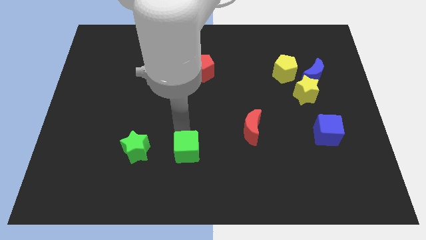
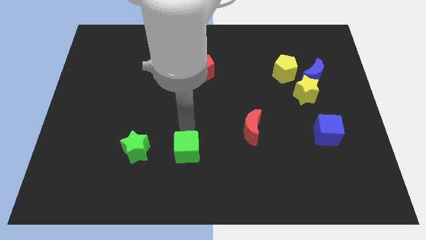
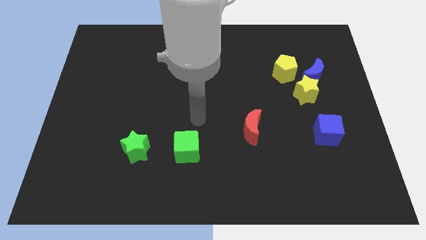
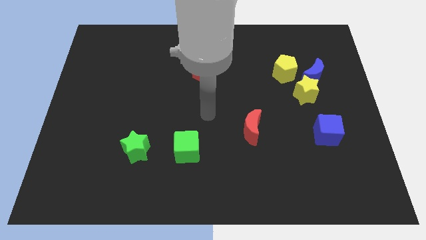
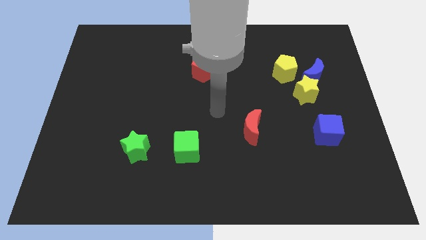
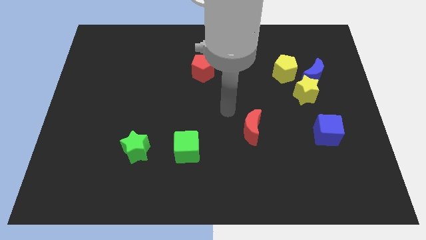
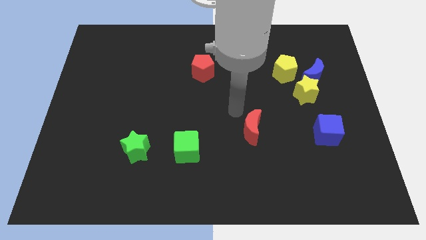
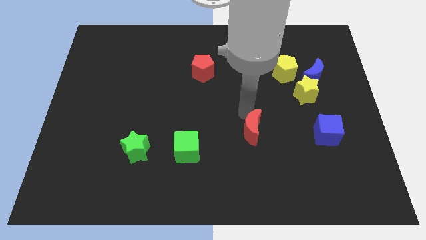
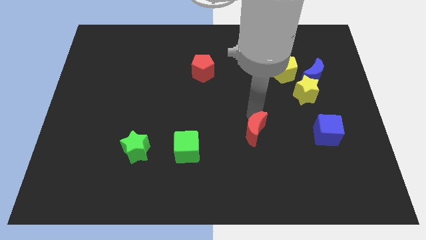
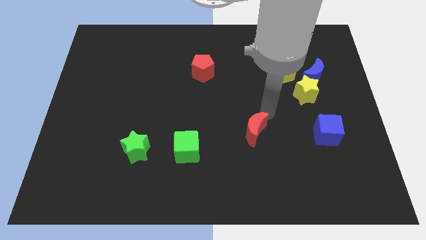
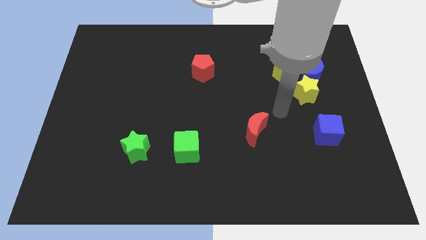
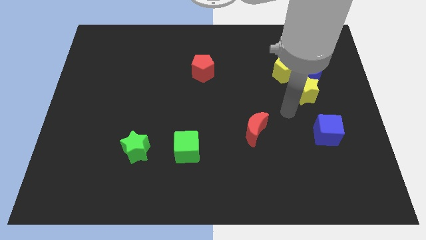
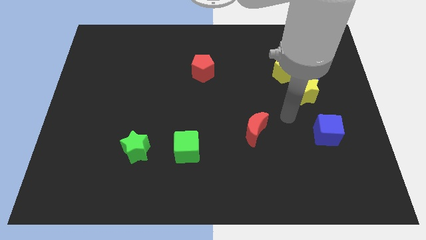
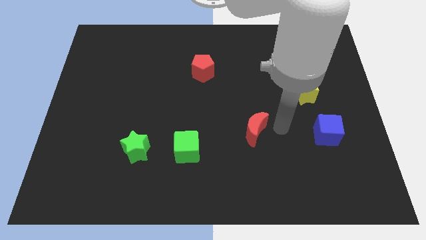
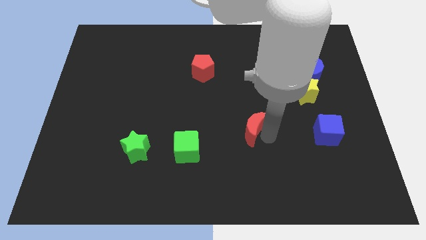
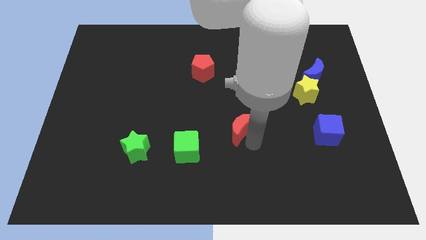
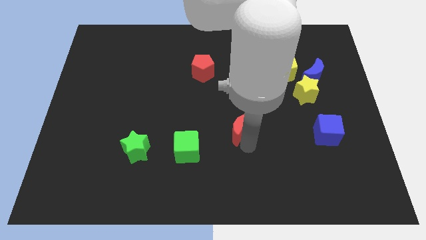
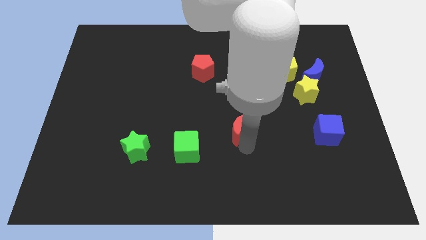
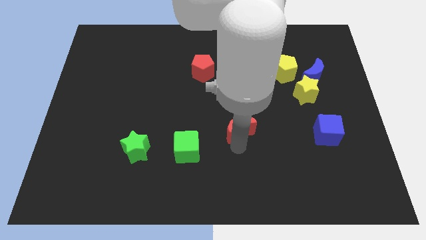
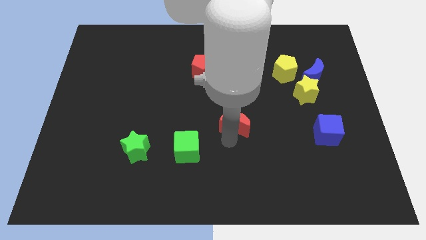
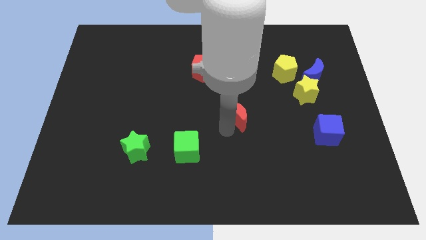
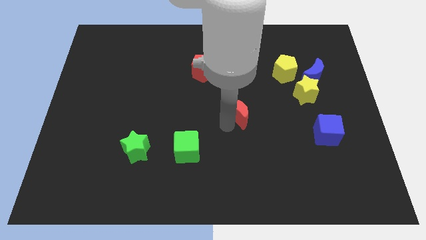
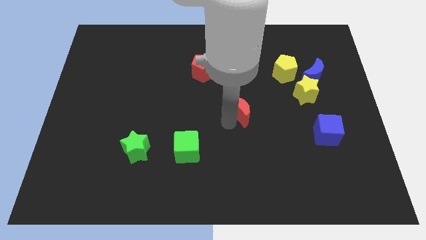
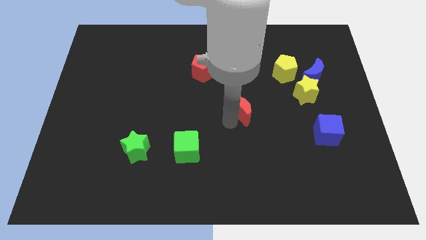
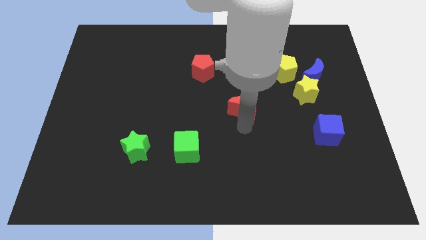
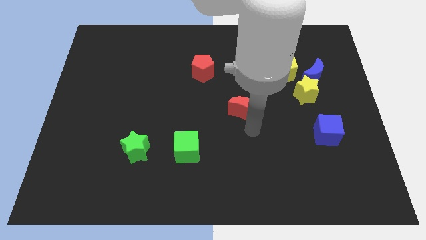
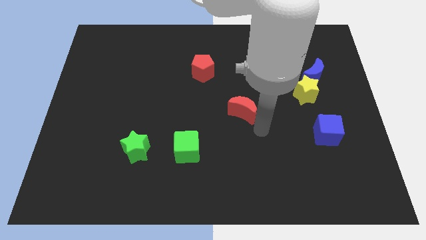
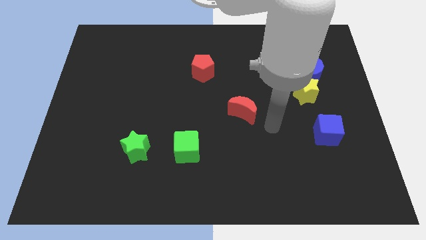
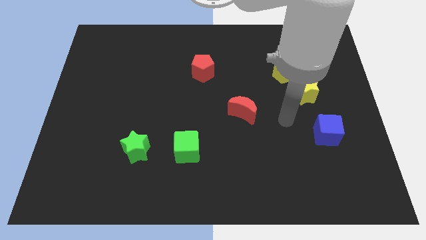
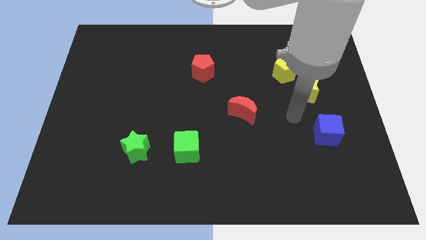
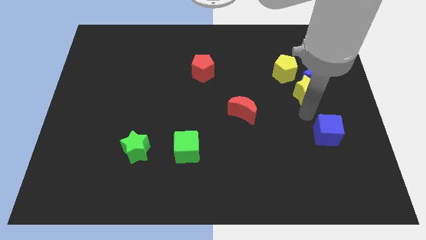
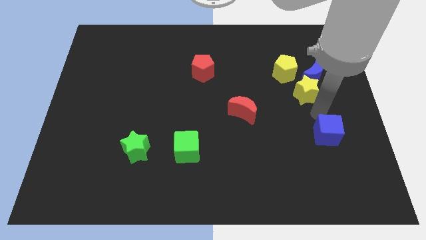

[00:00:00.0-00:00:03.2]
push the red crescent slightly to the top right of the board

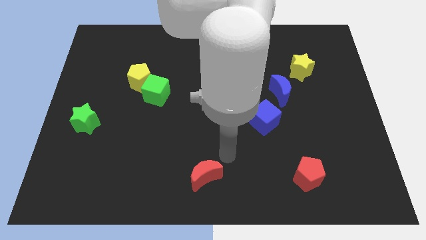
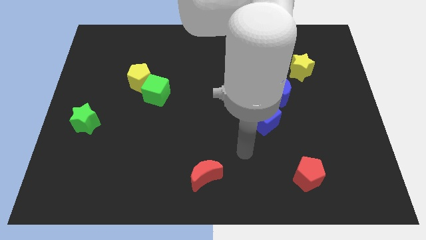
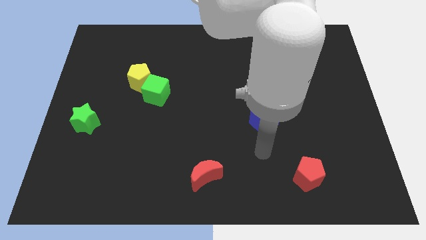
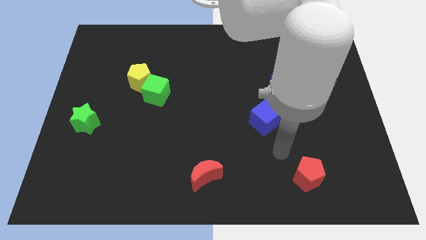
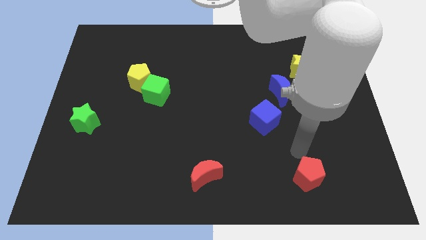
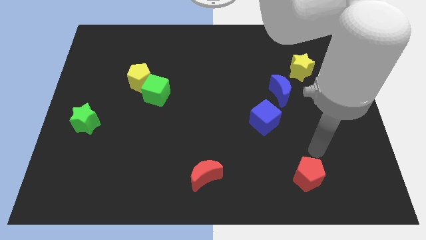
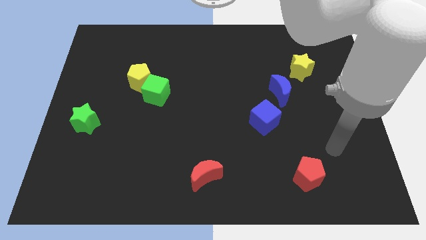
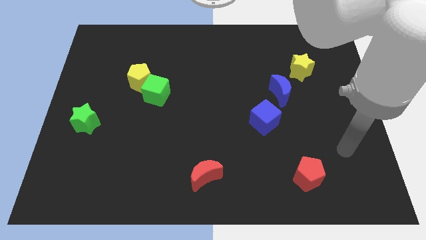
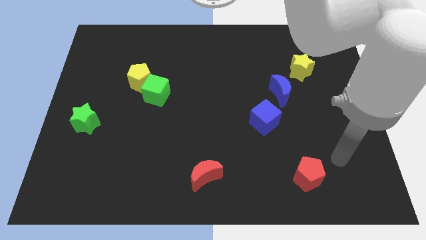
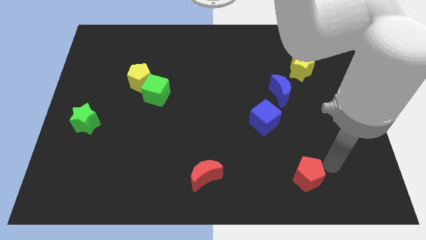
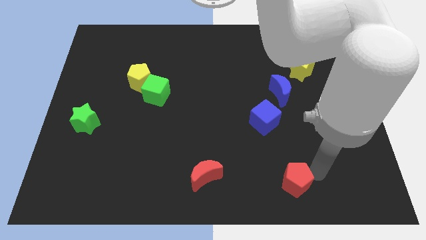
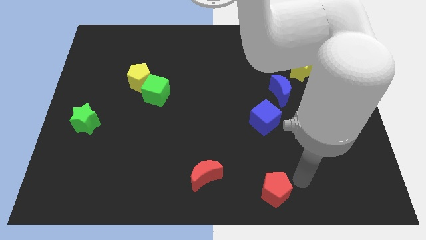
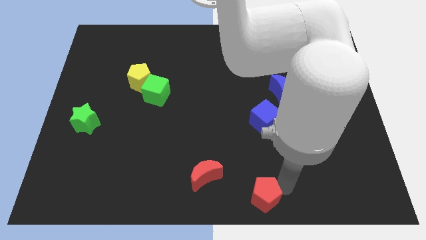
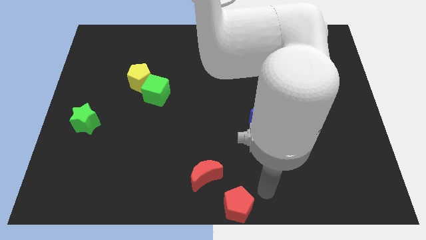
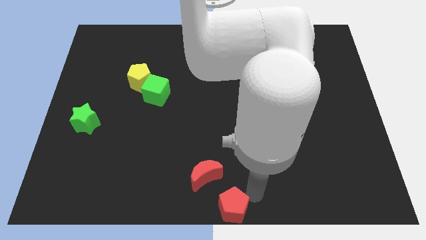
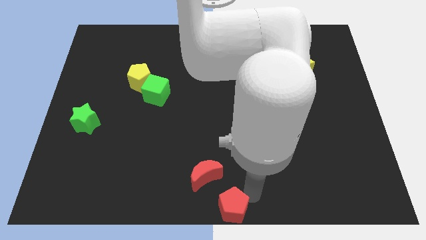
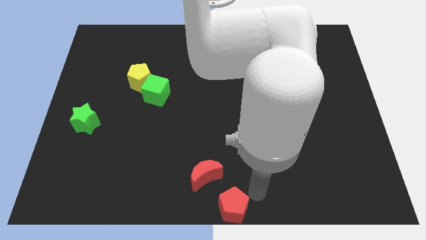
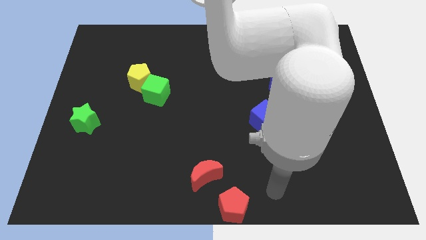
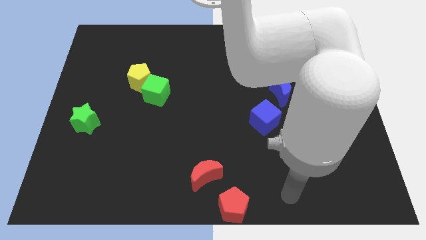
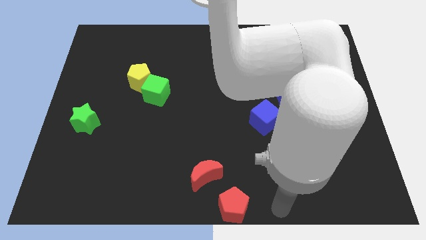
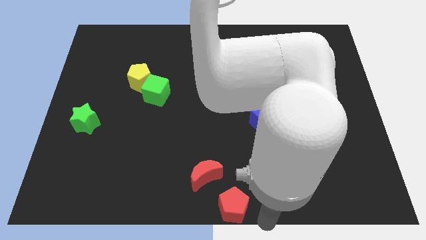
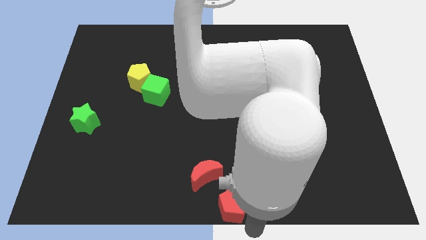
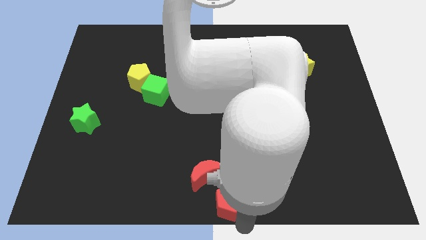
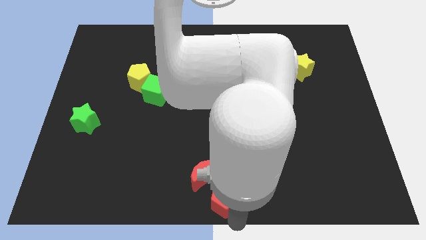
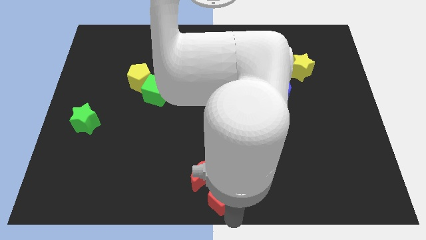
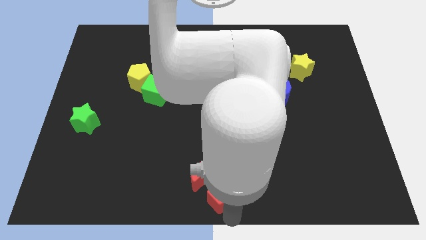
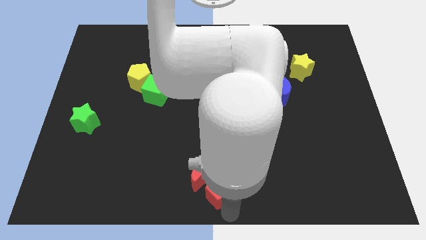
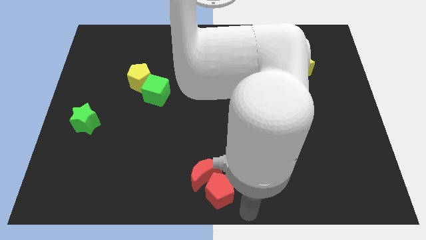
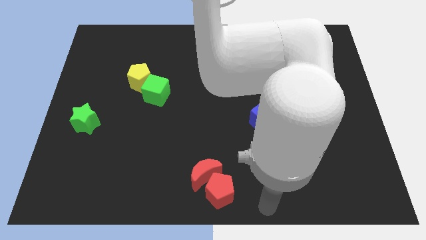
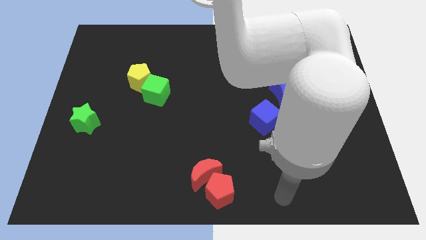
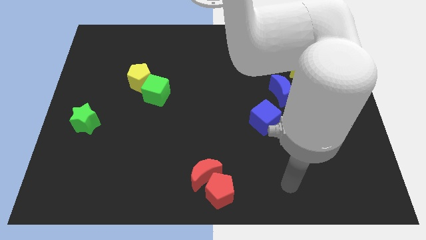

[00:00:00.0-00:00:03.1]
push the red pentagon into the red moon

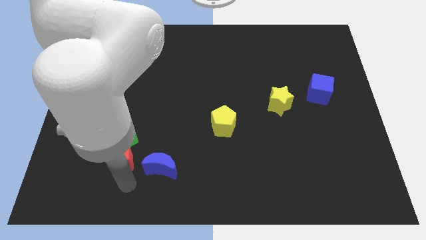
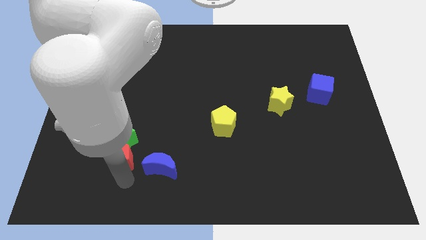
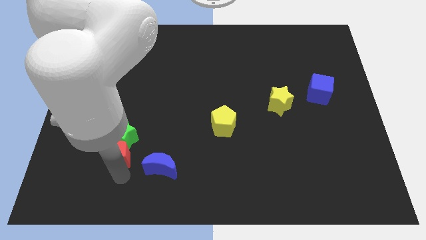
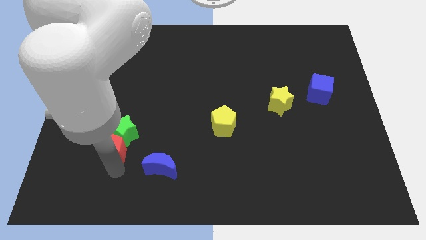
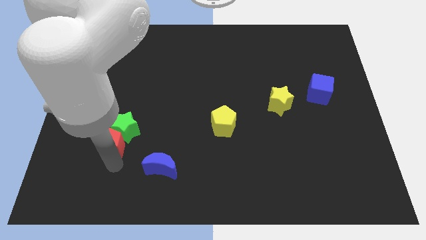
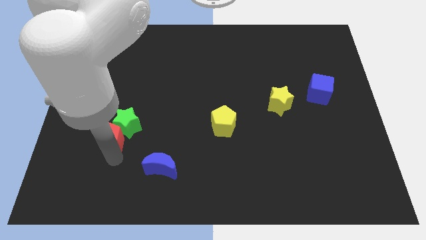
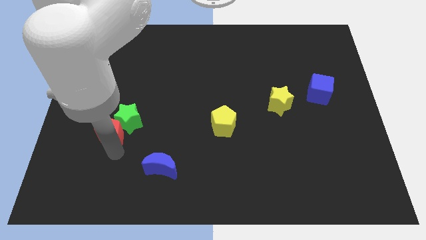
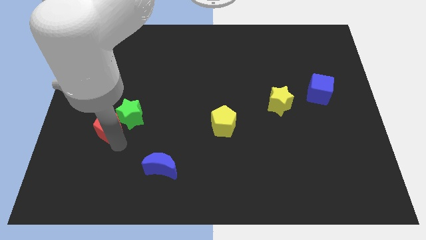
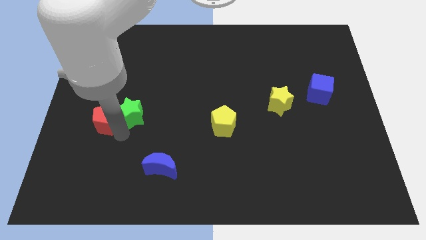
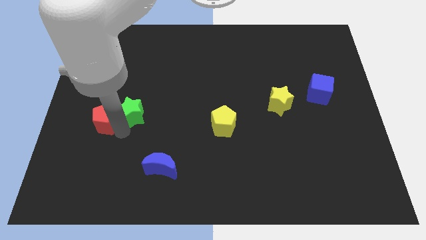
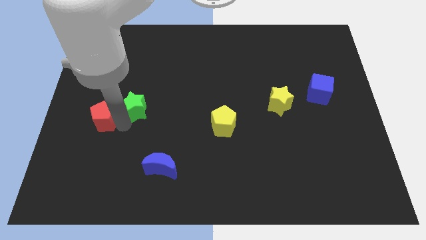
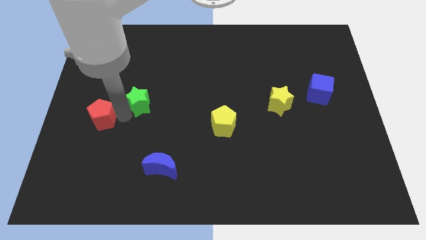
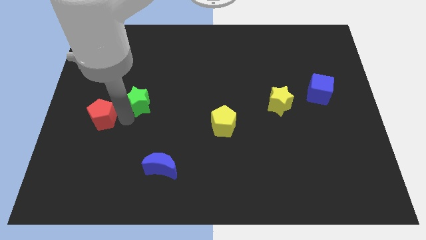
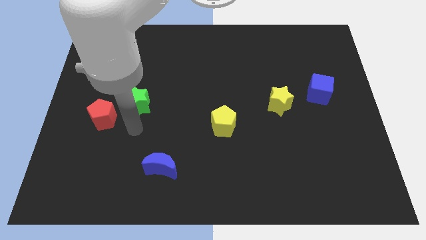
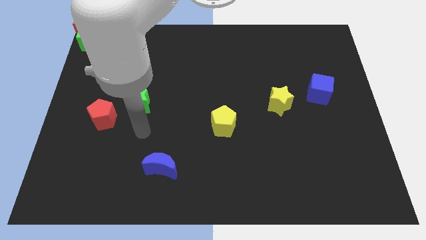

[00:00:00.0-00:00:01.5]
separate the green star and red pentagon

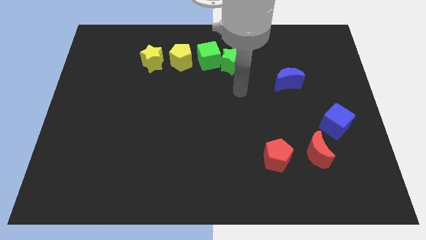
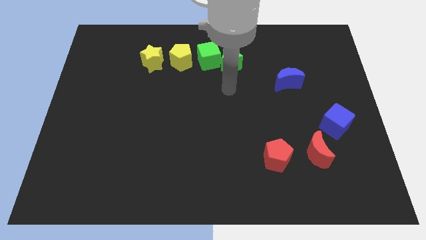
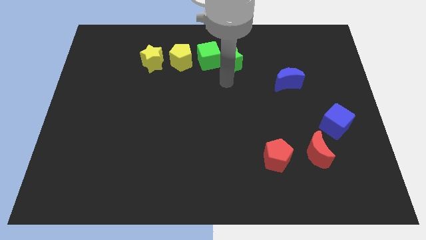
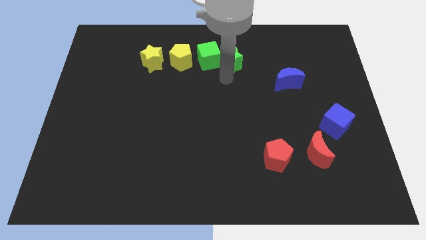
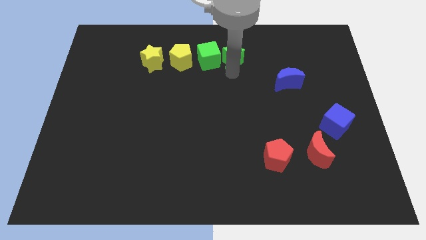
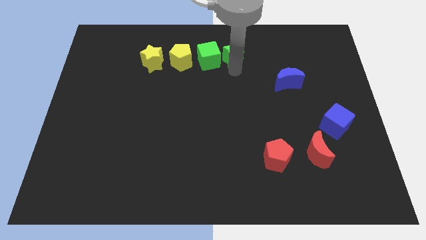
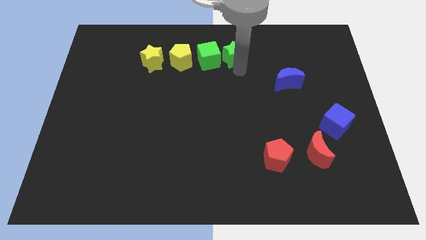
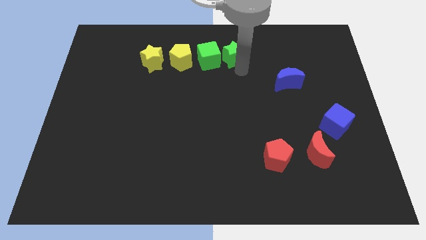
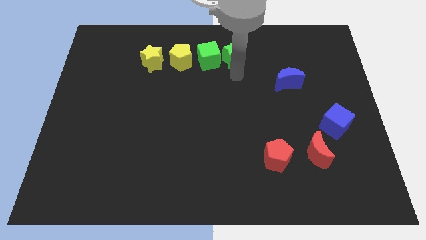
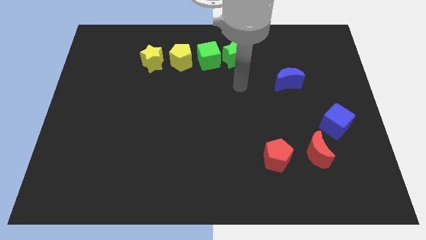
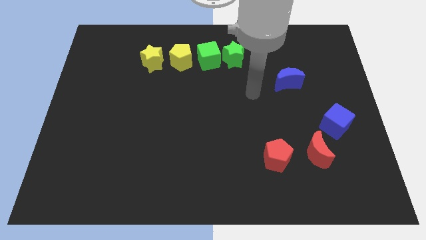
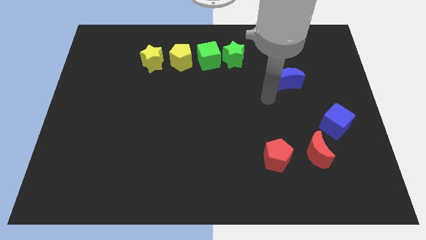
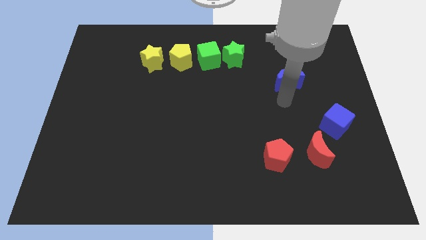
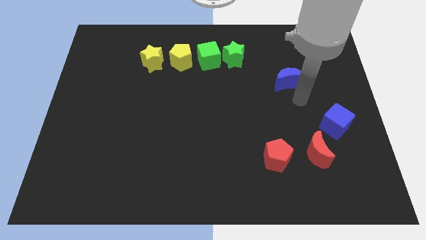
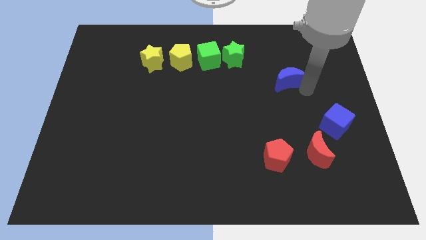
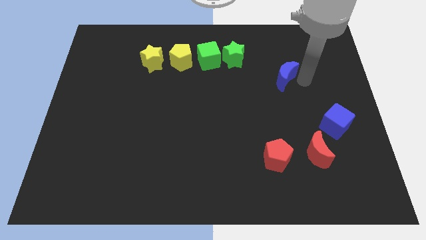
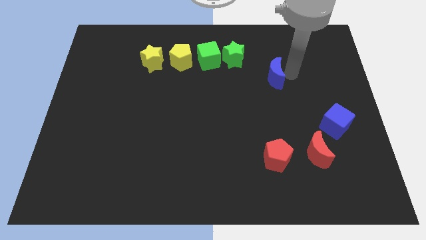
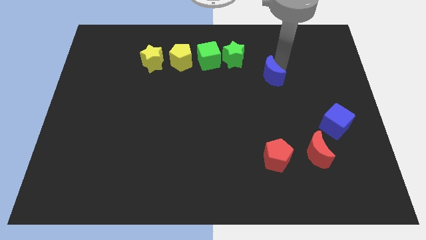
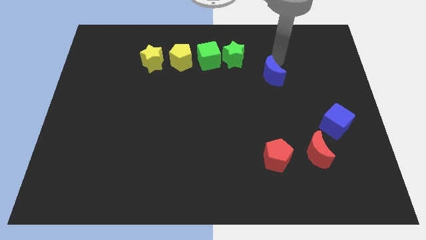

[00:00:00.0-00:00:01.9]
push the blue crescent towards the green star
